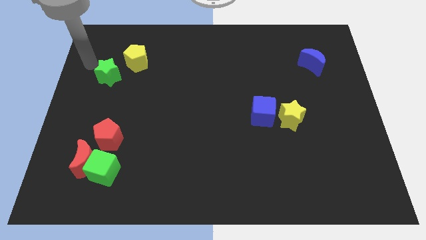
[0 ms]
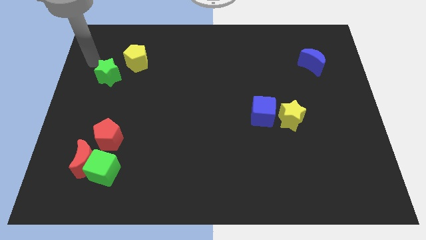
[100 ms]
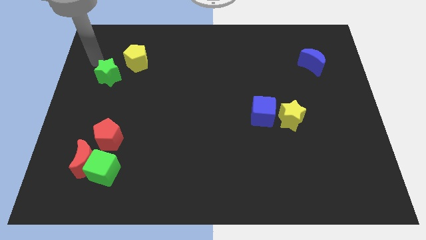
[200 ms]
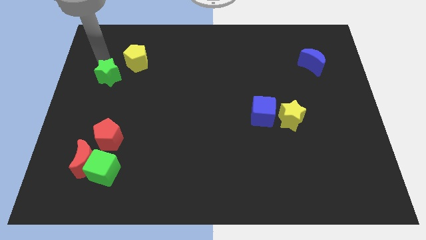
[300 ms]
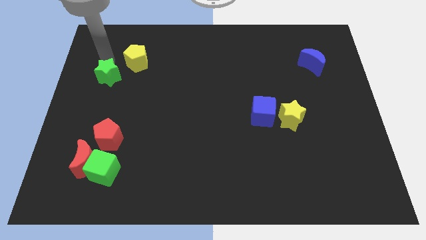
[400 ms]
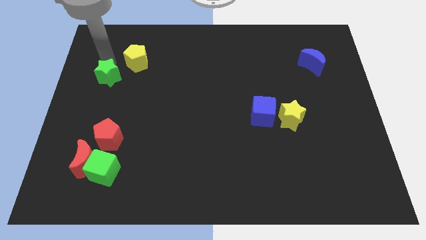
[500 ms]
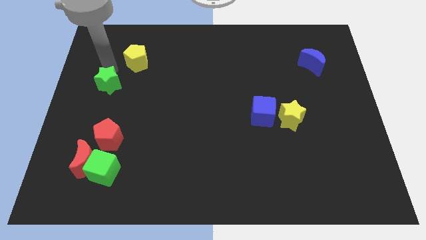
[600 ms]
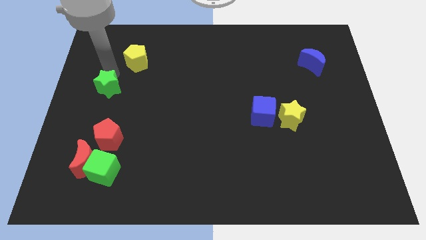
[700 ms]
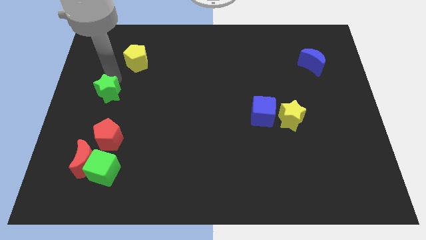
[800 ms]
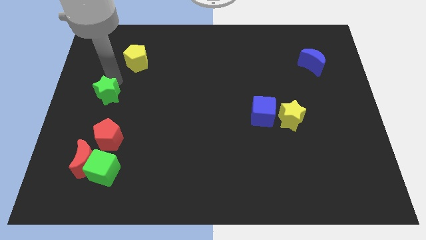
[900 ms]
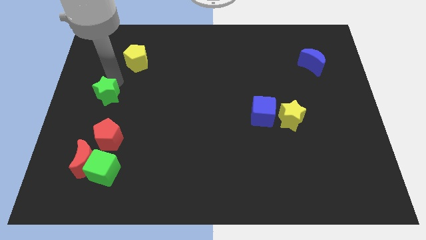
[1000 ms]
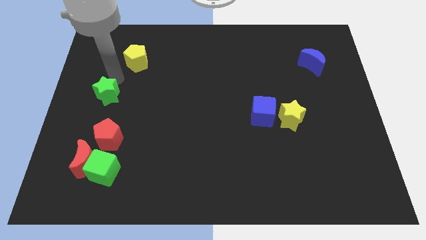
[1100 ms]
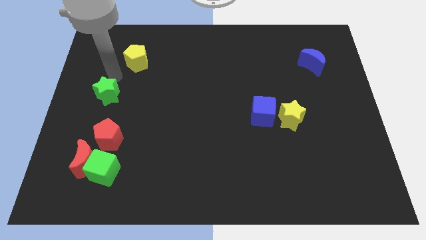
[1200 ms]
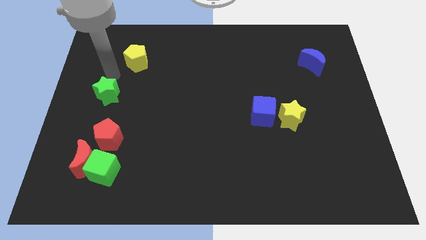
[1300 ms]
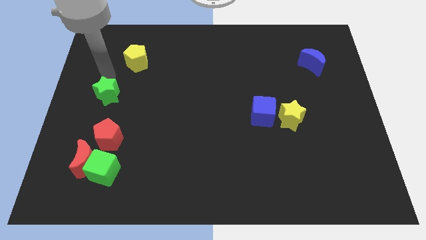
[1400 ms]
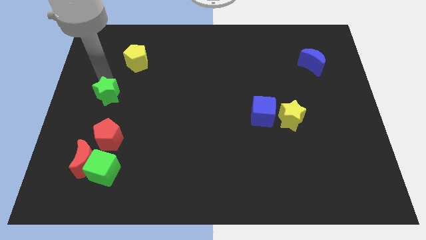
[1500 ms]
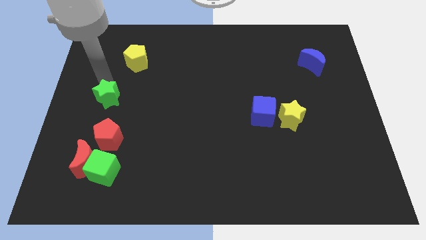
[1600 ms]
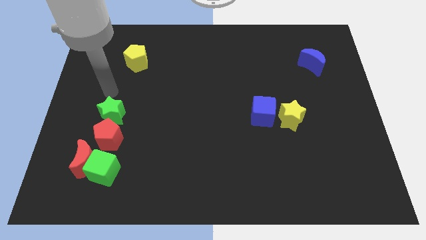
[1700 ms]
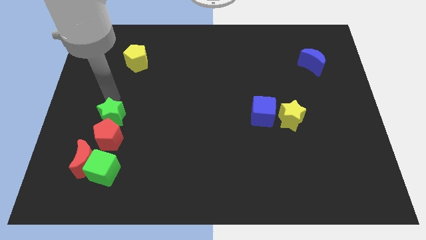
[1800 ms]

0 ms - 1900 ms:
slide the green star above the red pentagon

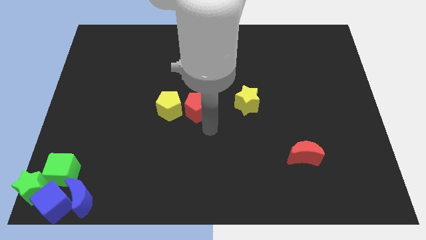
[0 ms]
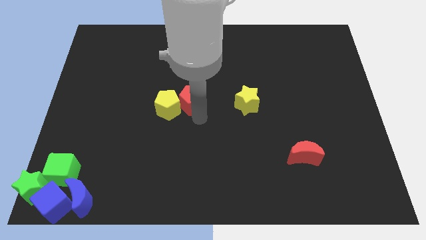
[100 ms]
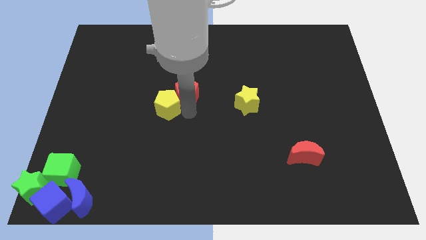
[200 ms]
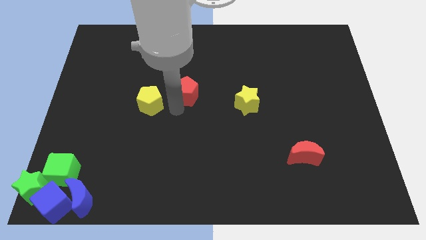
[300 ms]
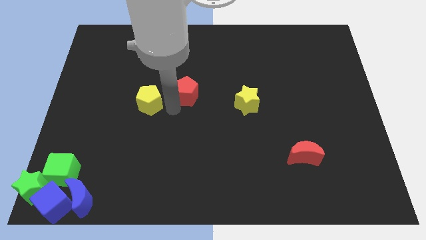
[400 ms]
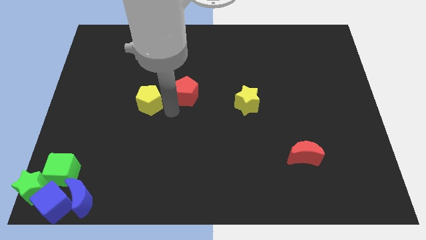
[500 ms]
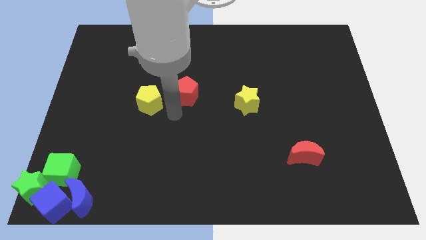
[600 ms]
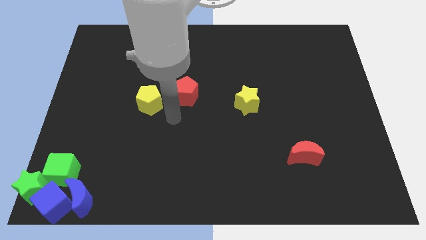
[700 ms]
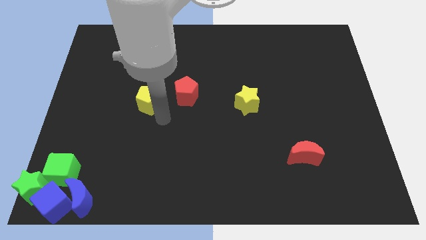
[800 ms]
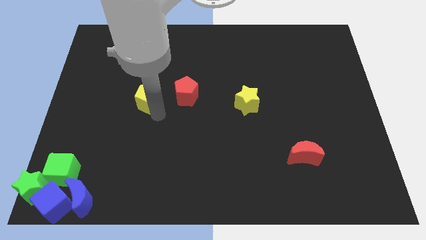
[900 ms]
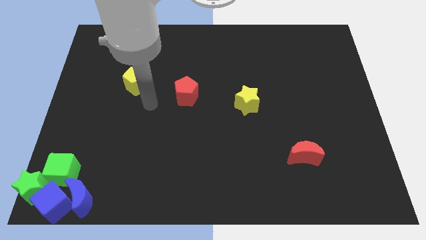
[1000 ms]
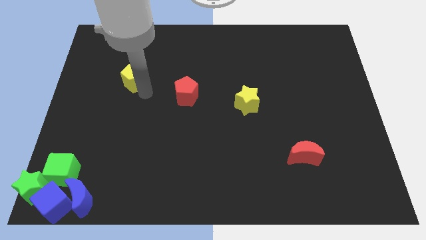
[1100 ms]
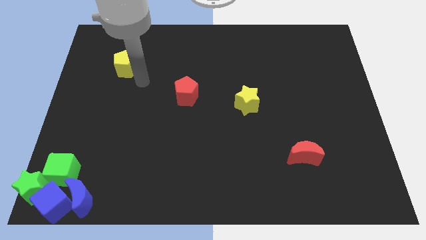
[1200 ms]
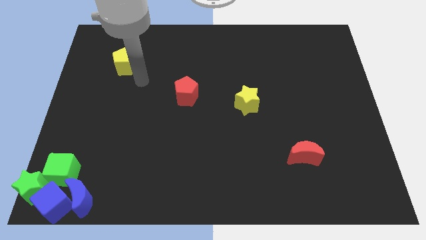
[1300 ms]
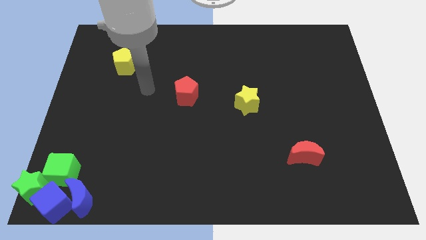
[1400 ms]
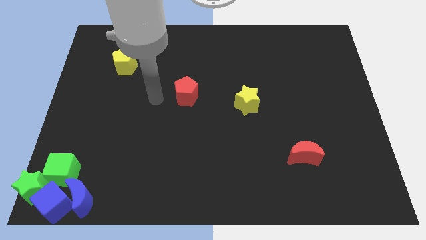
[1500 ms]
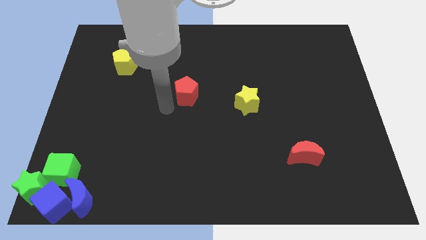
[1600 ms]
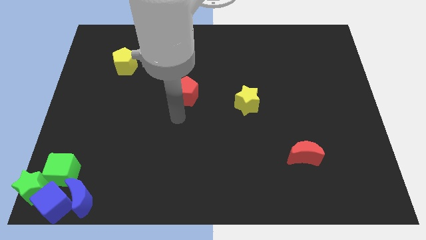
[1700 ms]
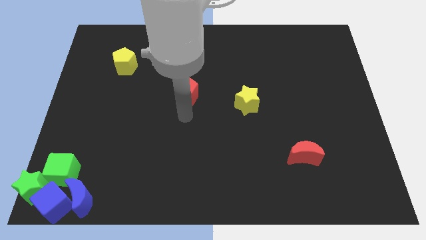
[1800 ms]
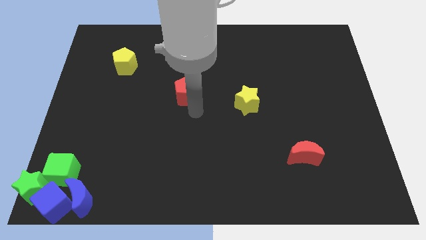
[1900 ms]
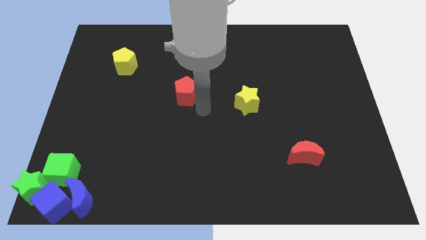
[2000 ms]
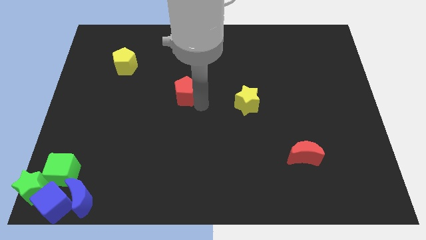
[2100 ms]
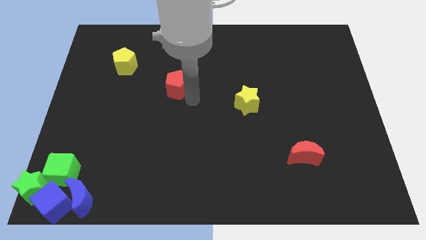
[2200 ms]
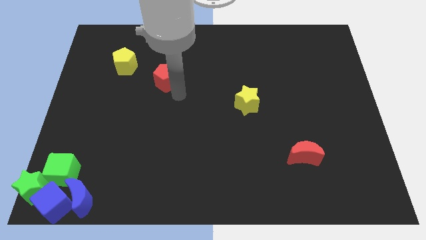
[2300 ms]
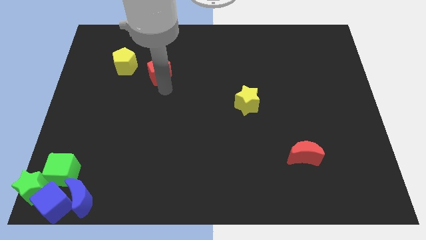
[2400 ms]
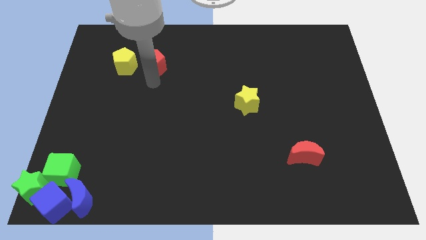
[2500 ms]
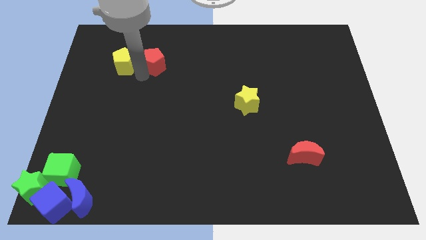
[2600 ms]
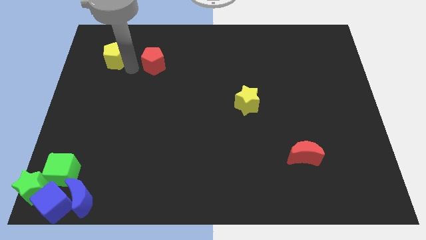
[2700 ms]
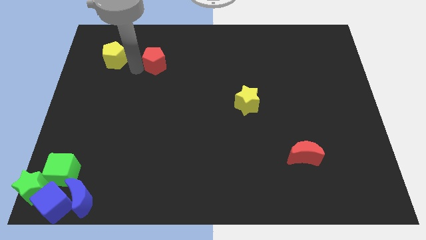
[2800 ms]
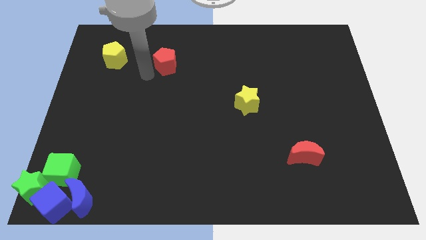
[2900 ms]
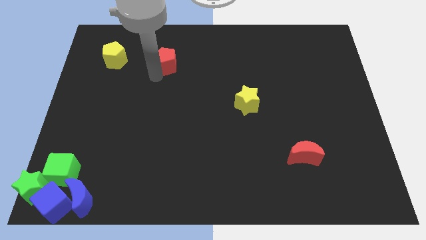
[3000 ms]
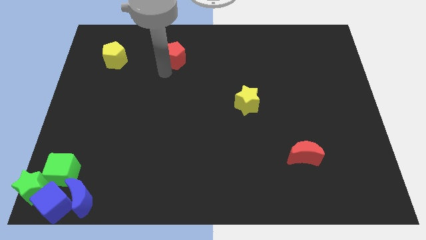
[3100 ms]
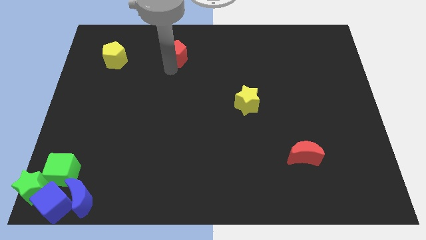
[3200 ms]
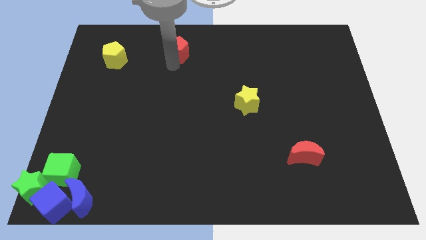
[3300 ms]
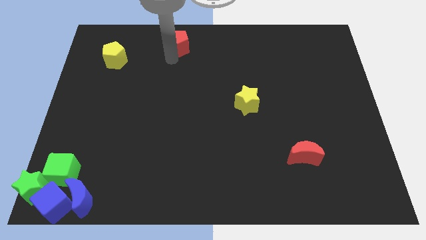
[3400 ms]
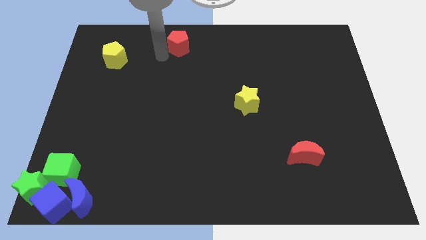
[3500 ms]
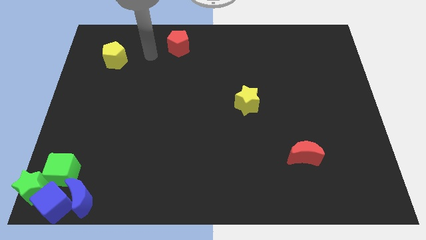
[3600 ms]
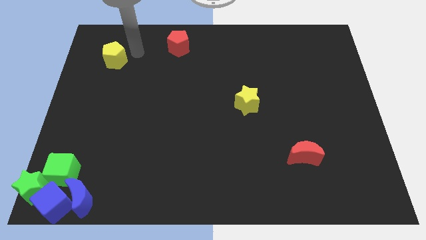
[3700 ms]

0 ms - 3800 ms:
separate yellow pentagon and red pentagon

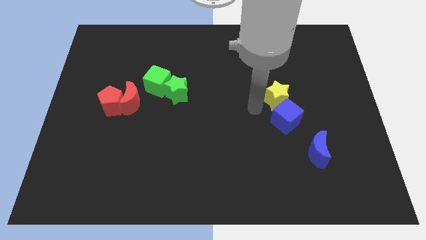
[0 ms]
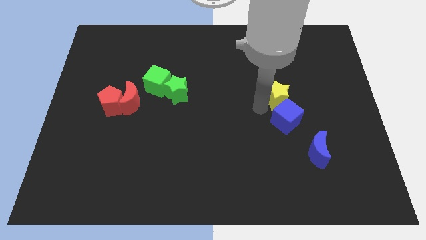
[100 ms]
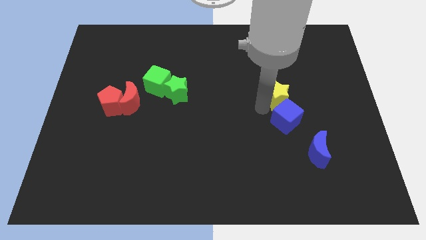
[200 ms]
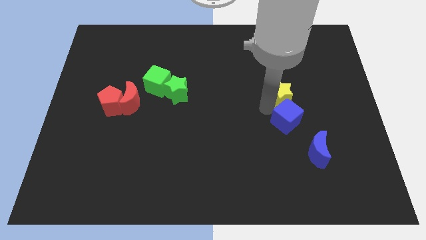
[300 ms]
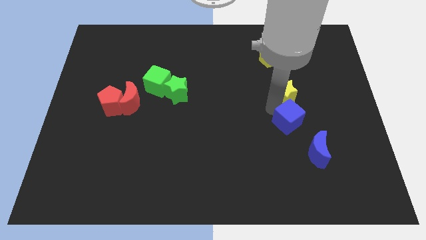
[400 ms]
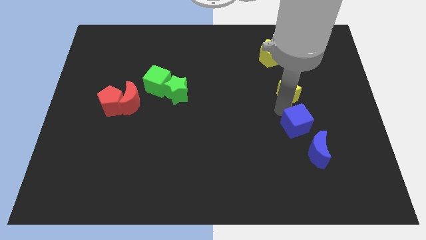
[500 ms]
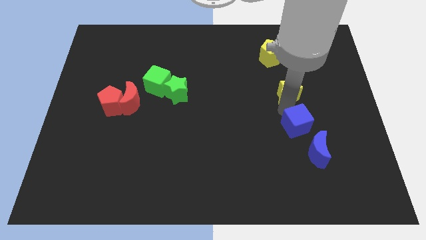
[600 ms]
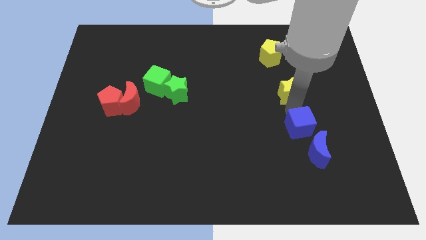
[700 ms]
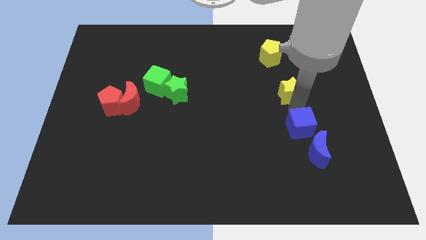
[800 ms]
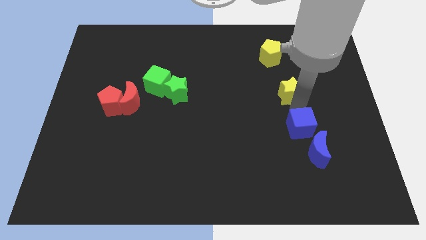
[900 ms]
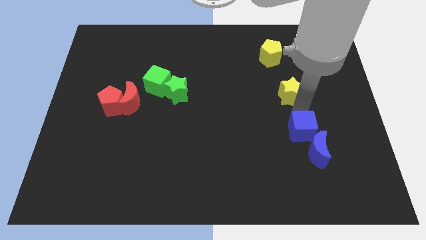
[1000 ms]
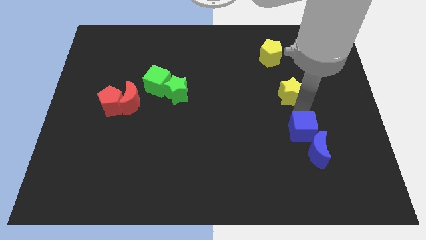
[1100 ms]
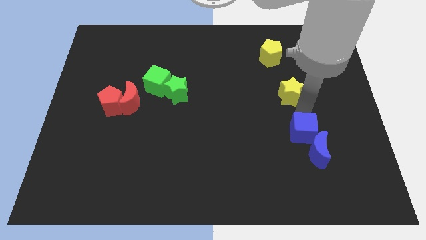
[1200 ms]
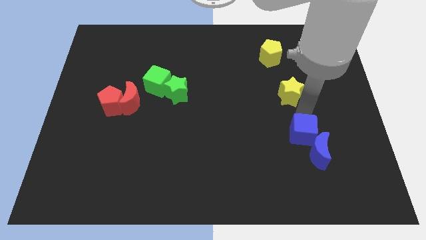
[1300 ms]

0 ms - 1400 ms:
push the blue cube into the top side of the blue moon

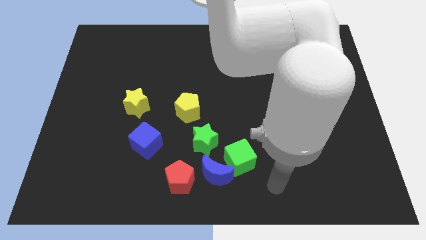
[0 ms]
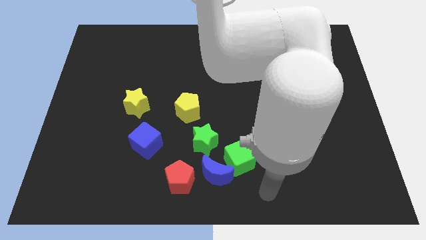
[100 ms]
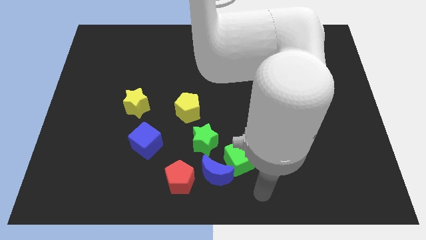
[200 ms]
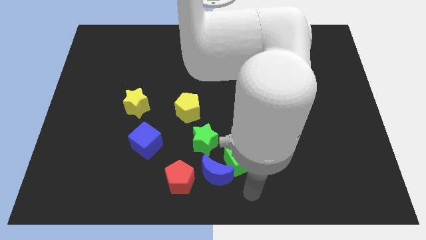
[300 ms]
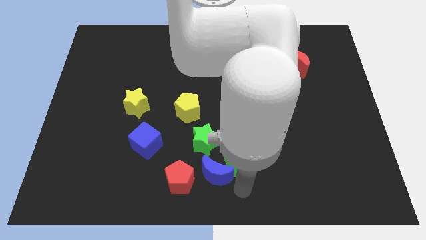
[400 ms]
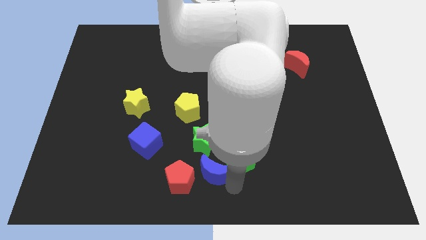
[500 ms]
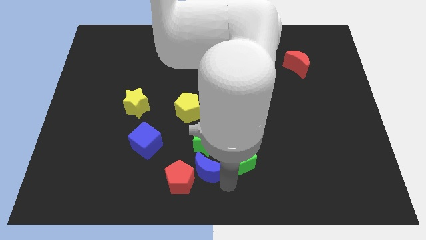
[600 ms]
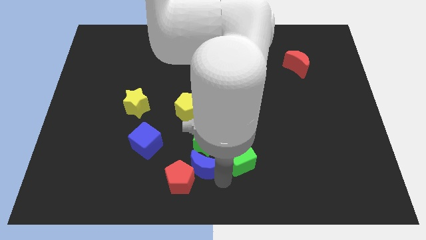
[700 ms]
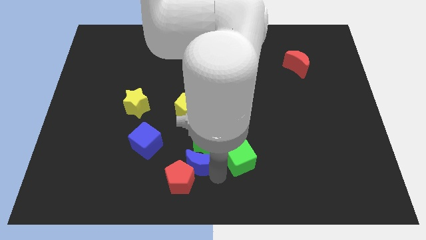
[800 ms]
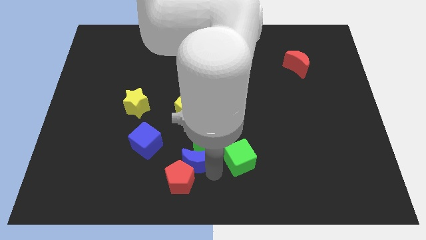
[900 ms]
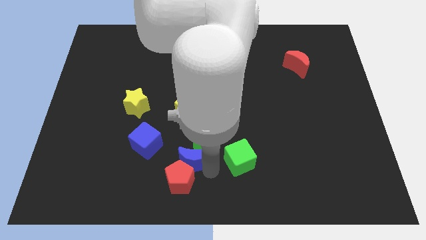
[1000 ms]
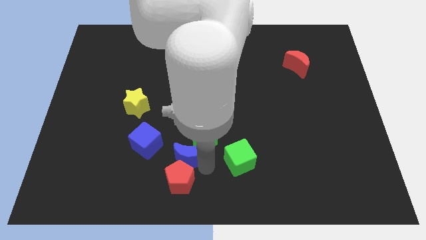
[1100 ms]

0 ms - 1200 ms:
separate the blue crescent from the green cube

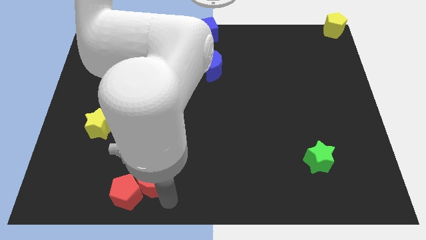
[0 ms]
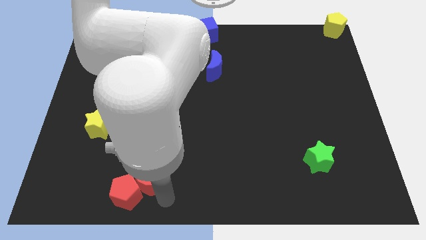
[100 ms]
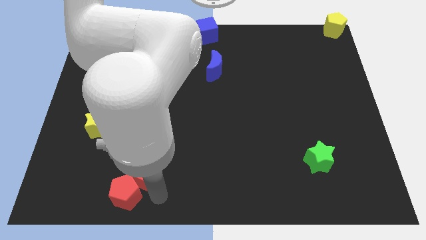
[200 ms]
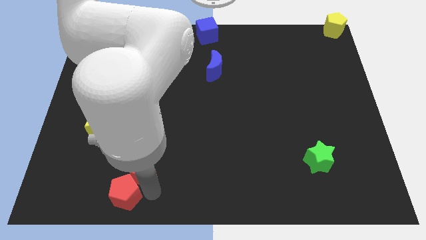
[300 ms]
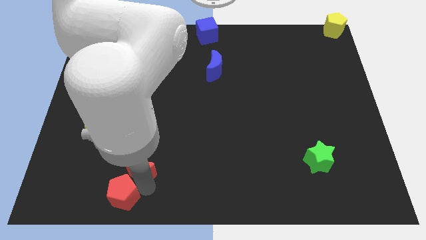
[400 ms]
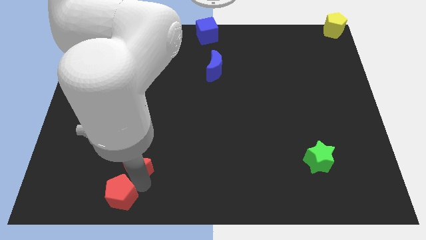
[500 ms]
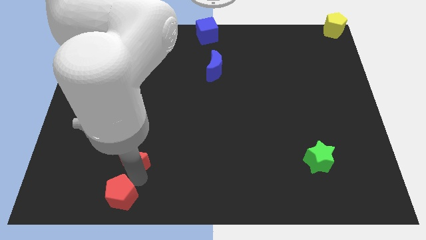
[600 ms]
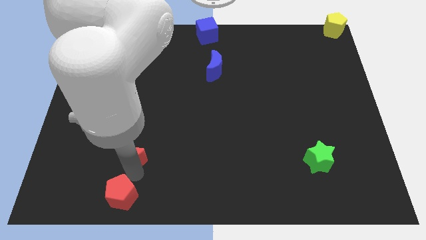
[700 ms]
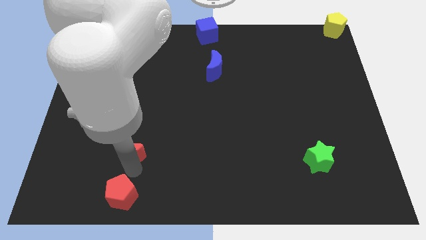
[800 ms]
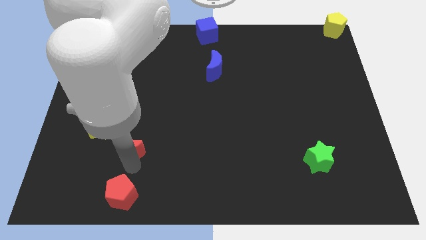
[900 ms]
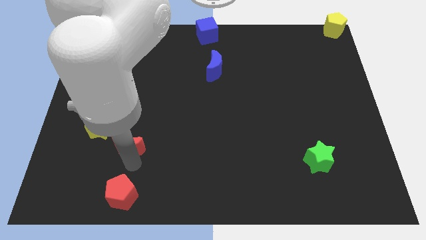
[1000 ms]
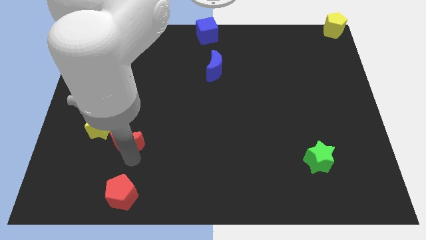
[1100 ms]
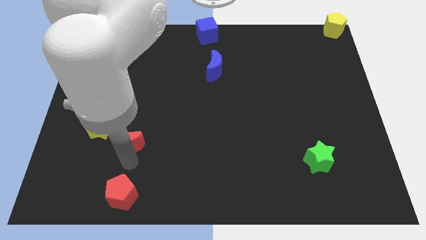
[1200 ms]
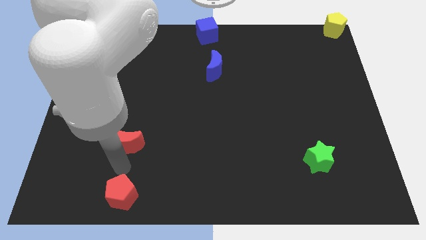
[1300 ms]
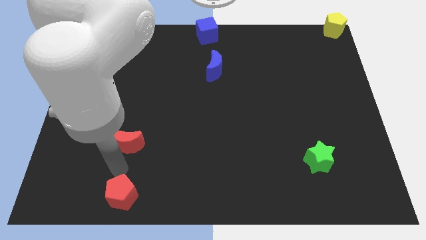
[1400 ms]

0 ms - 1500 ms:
separate the red moon from the red pentagon
